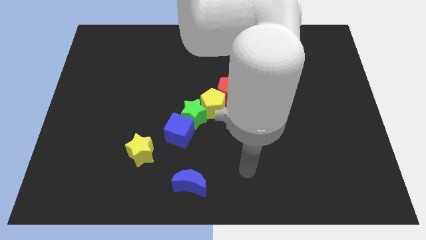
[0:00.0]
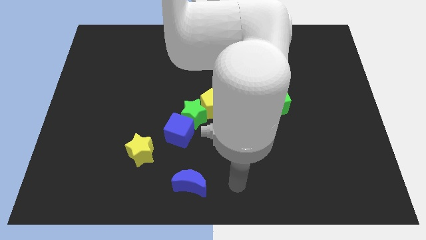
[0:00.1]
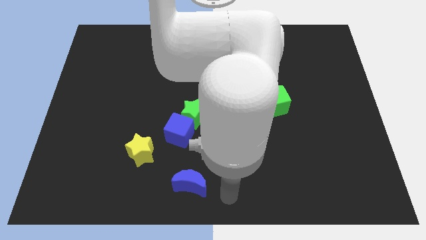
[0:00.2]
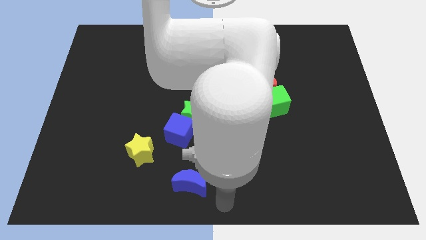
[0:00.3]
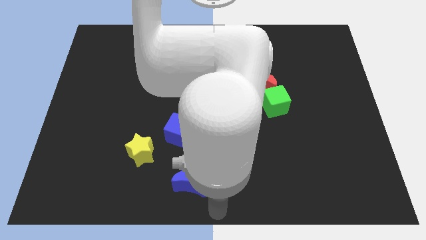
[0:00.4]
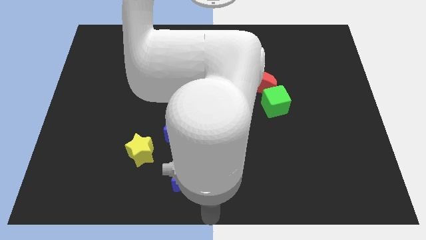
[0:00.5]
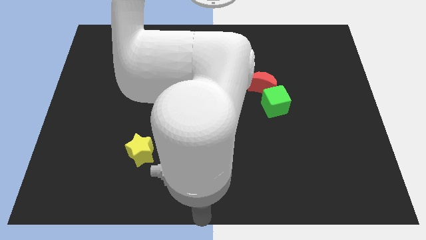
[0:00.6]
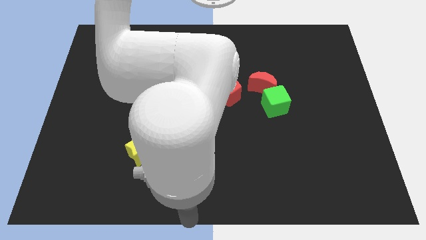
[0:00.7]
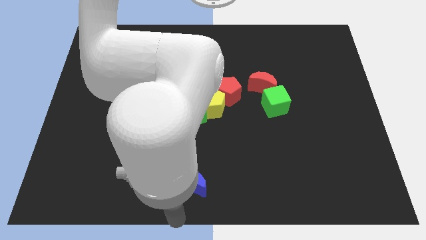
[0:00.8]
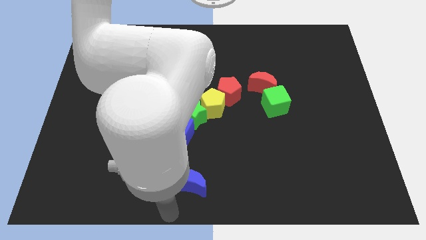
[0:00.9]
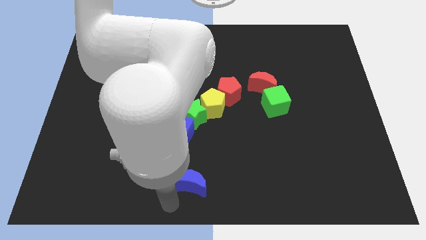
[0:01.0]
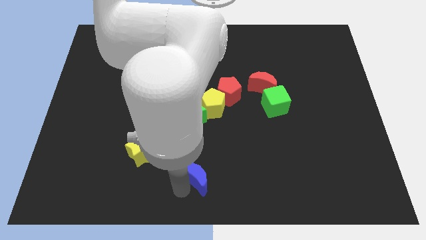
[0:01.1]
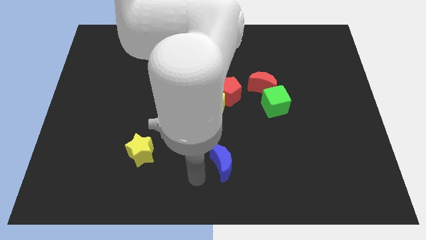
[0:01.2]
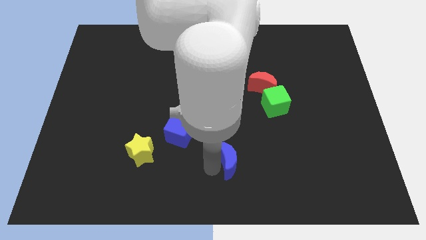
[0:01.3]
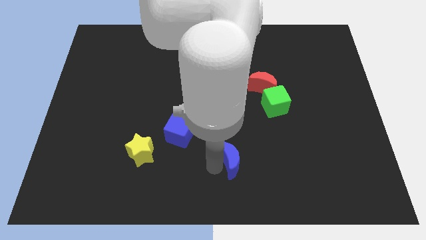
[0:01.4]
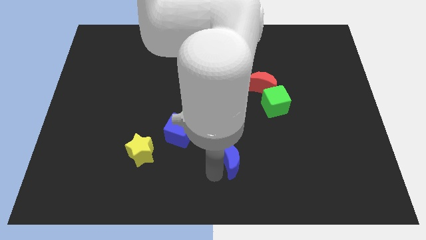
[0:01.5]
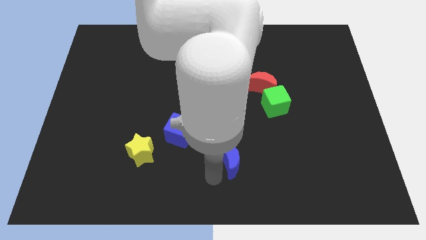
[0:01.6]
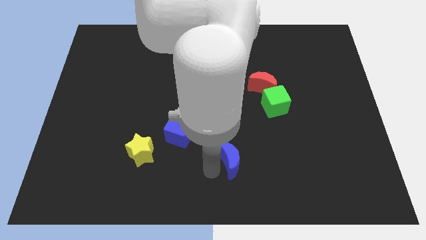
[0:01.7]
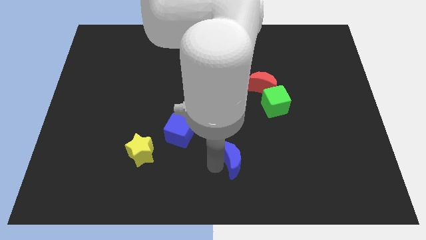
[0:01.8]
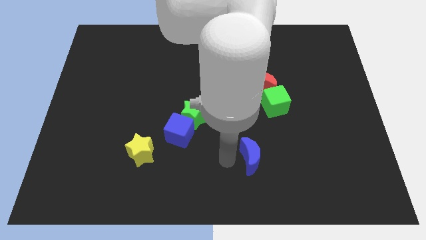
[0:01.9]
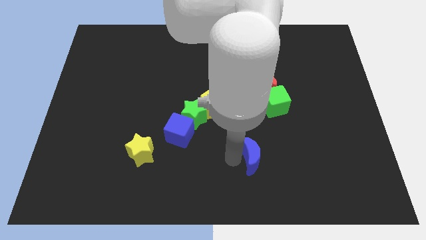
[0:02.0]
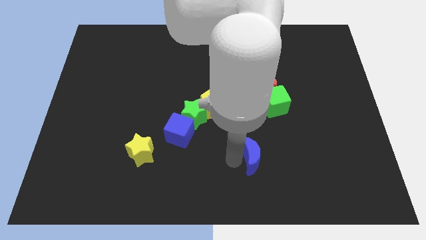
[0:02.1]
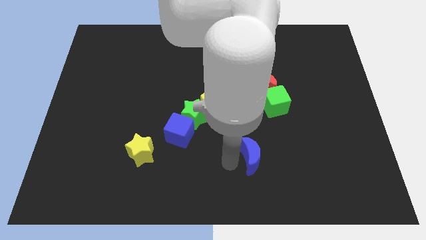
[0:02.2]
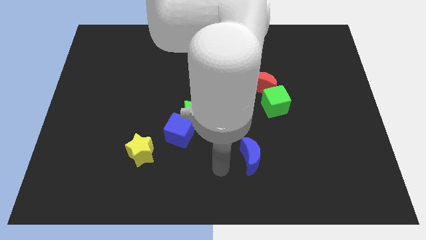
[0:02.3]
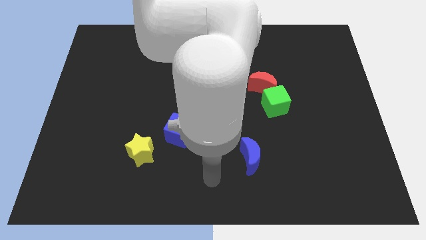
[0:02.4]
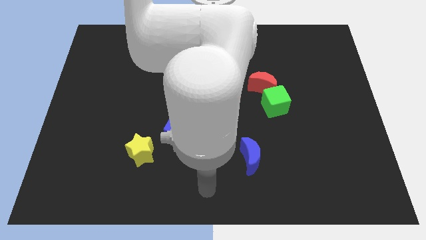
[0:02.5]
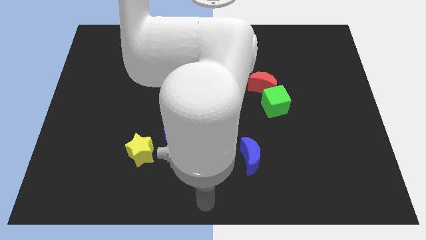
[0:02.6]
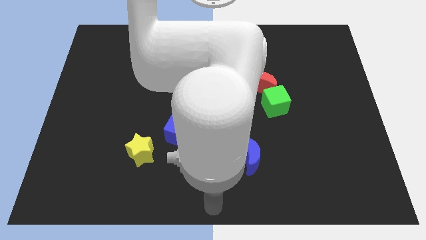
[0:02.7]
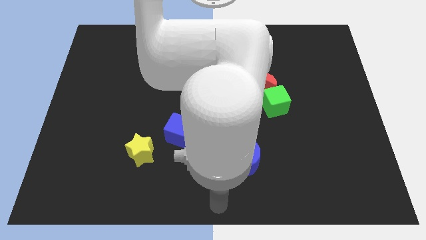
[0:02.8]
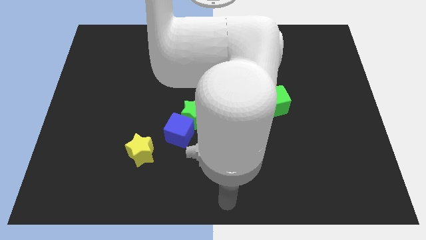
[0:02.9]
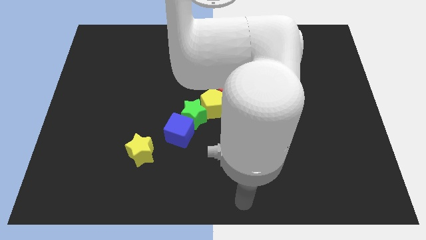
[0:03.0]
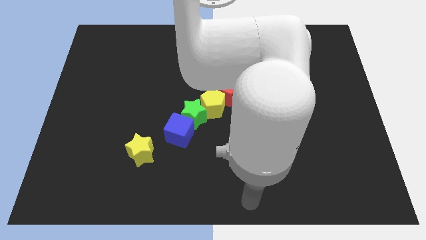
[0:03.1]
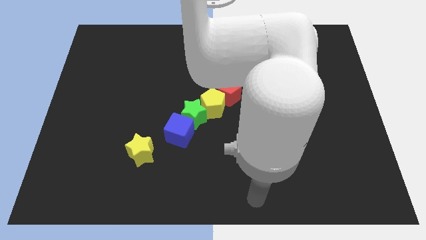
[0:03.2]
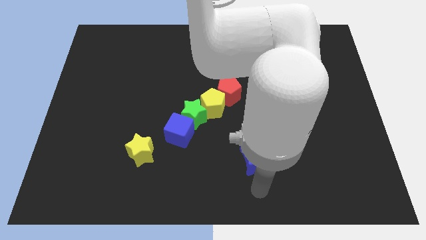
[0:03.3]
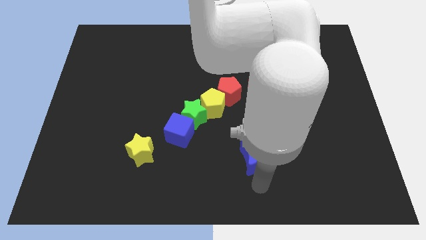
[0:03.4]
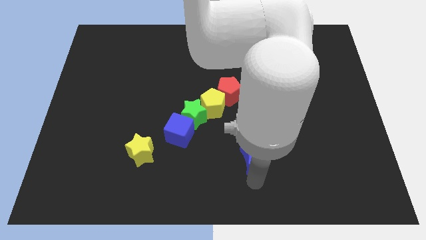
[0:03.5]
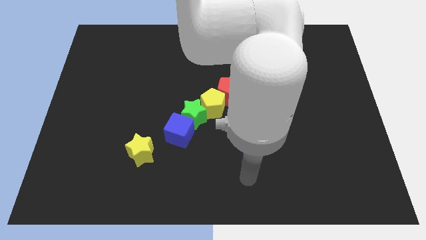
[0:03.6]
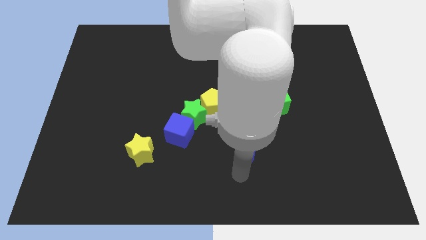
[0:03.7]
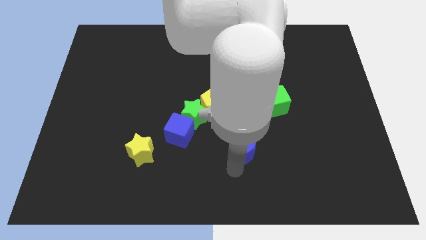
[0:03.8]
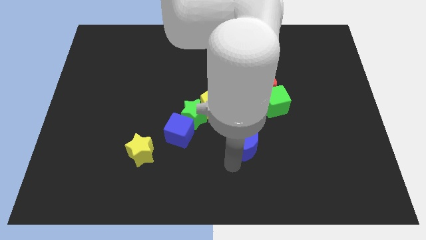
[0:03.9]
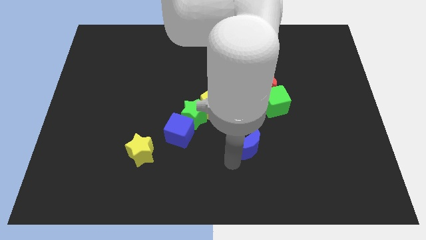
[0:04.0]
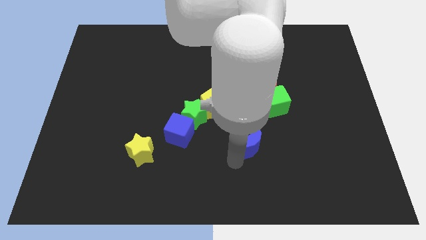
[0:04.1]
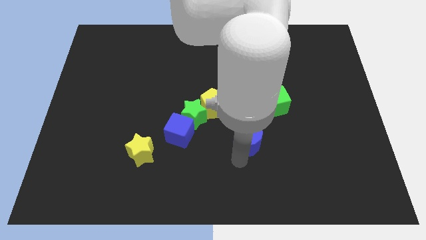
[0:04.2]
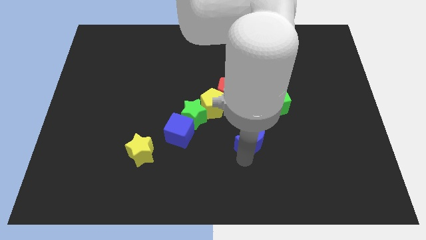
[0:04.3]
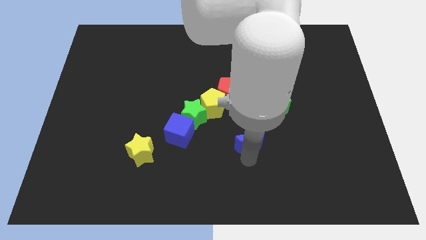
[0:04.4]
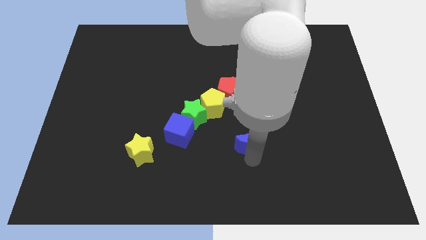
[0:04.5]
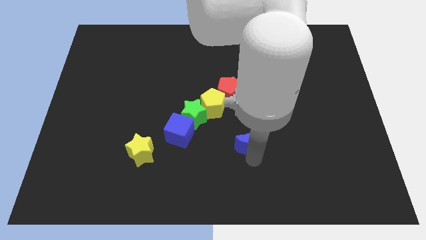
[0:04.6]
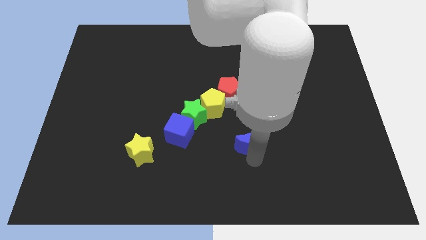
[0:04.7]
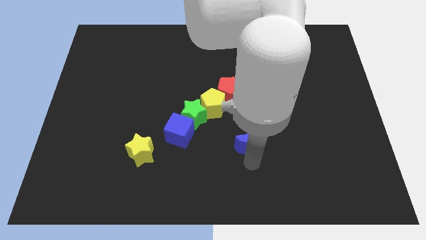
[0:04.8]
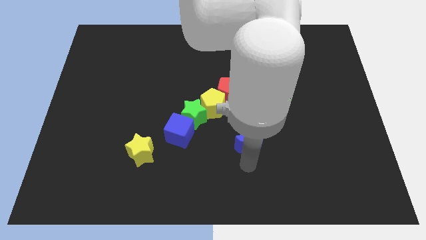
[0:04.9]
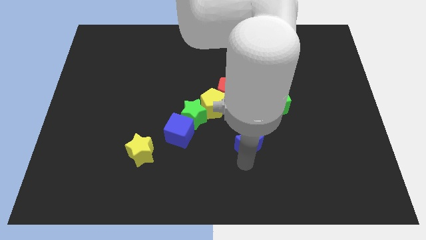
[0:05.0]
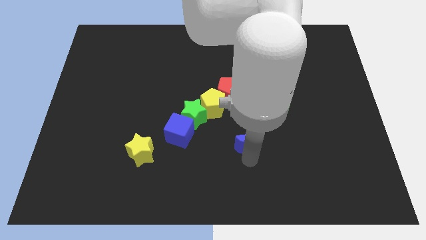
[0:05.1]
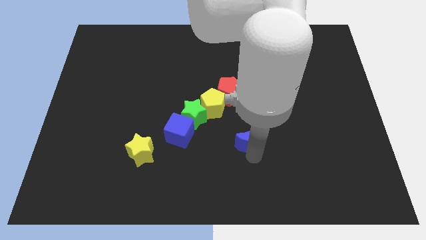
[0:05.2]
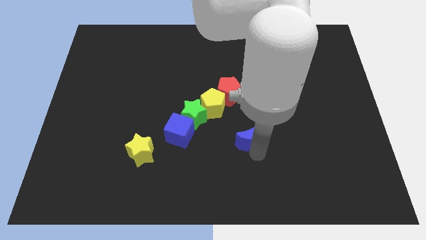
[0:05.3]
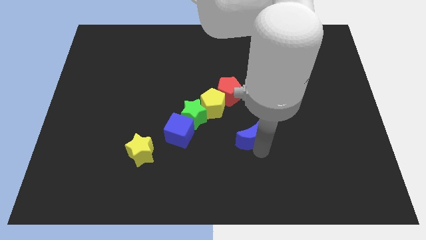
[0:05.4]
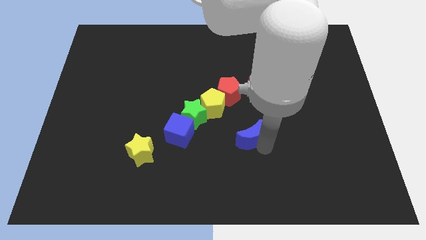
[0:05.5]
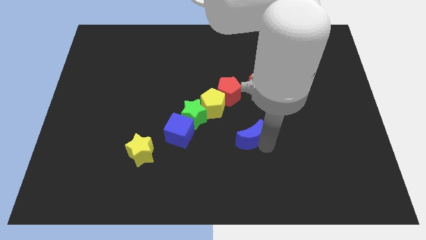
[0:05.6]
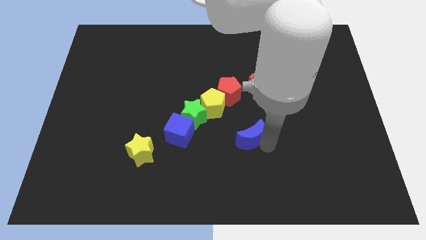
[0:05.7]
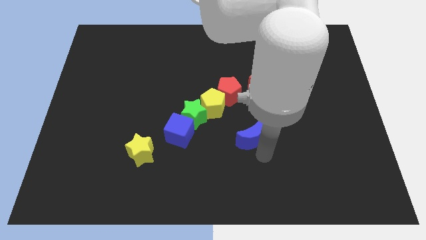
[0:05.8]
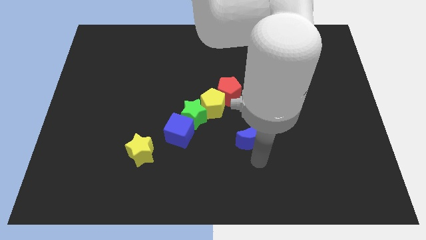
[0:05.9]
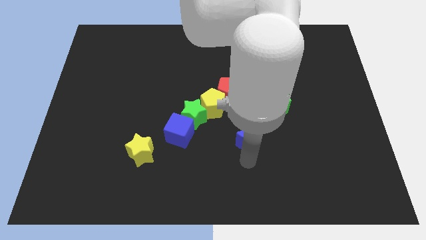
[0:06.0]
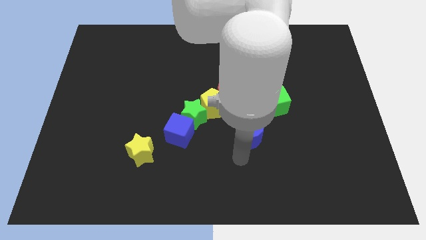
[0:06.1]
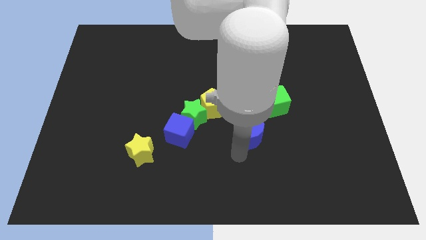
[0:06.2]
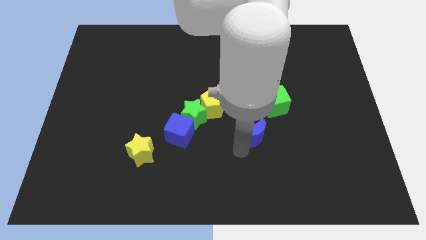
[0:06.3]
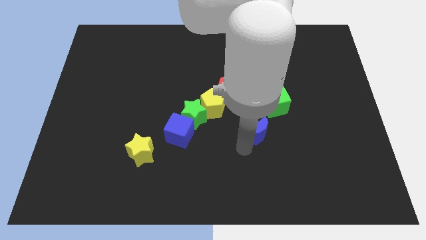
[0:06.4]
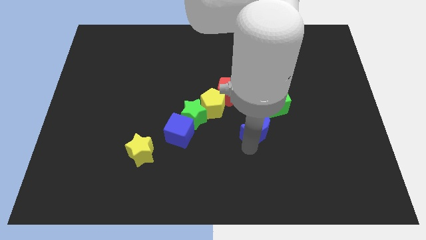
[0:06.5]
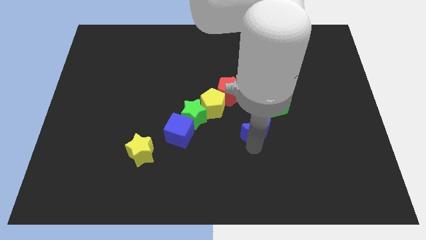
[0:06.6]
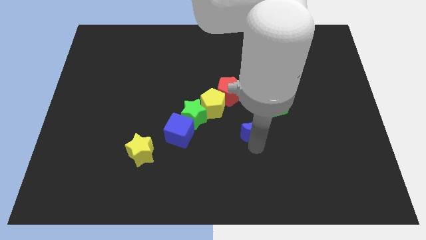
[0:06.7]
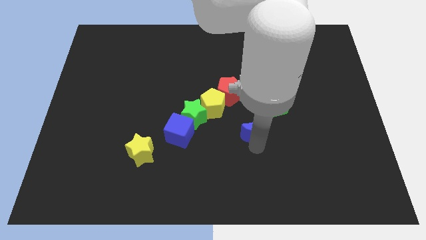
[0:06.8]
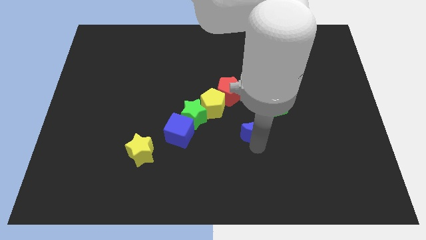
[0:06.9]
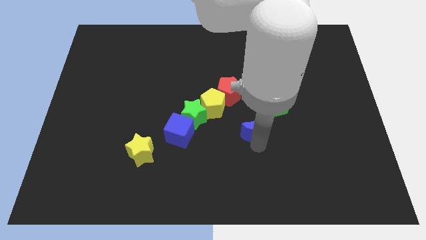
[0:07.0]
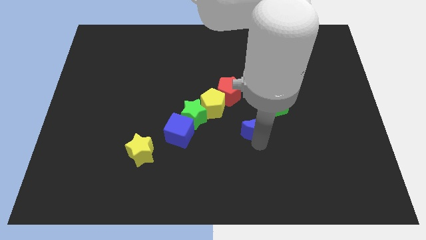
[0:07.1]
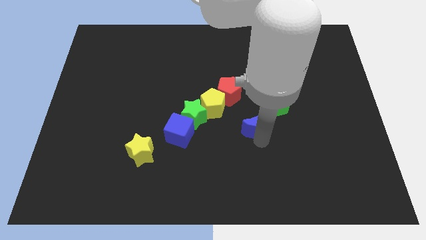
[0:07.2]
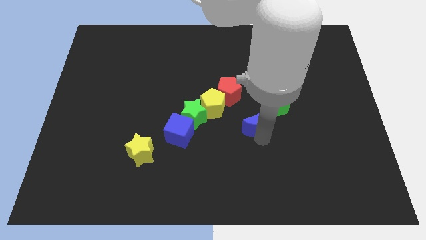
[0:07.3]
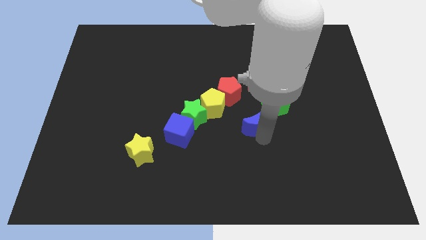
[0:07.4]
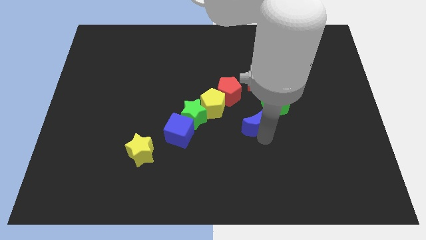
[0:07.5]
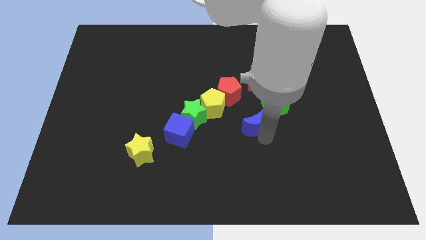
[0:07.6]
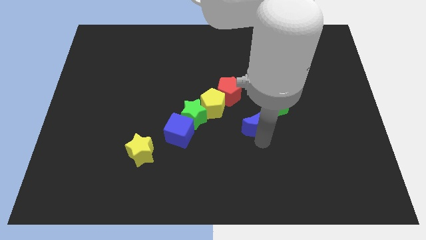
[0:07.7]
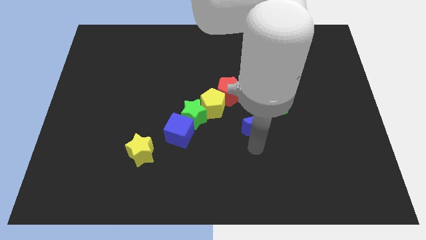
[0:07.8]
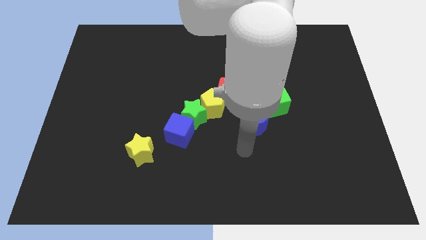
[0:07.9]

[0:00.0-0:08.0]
push the blue crescent to the left bottom of green cube

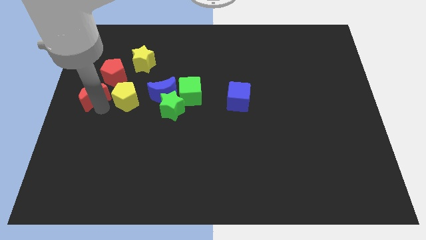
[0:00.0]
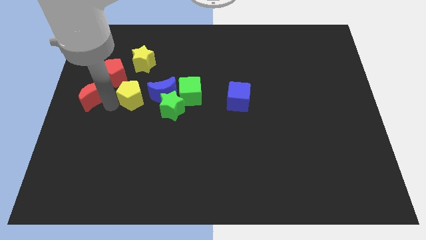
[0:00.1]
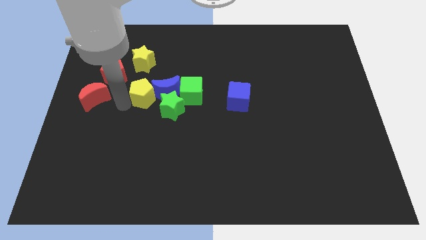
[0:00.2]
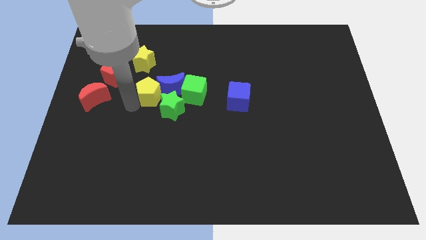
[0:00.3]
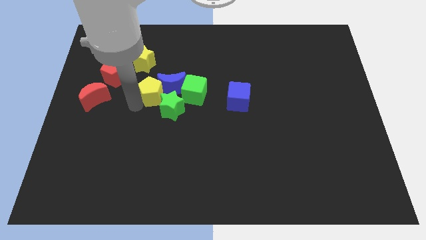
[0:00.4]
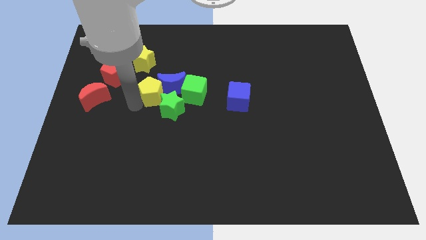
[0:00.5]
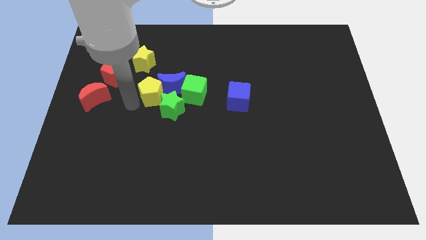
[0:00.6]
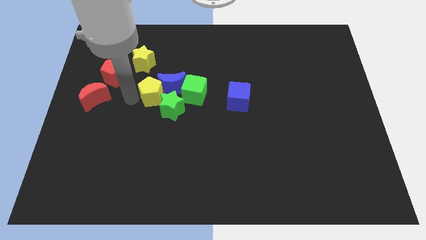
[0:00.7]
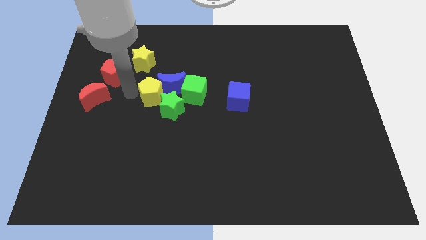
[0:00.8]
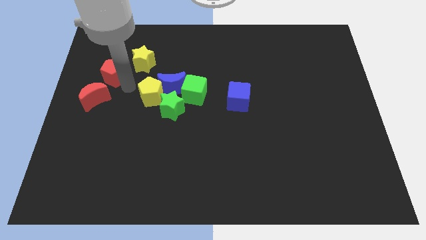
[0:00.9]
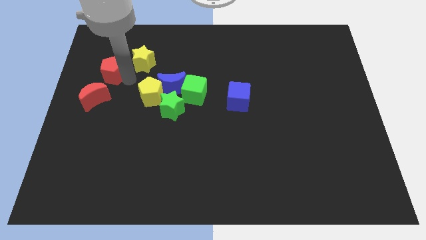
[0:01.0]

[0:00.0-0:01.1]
move the yellow pentagon into the blue resent
